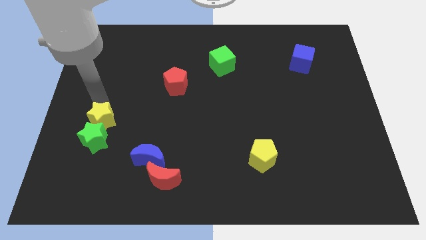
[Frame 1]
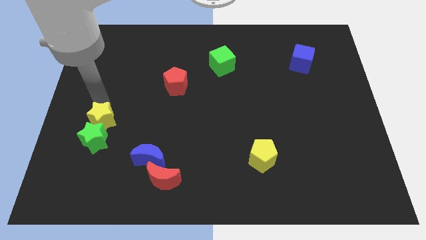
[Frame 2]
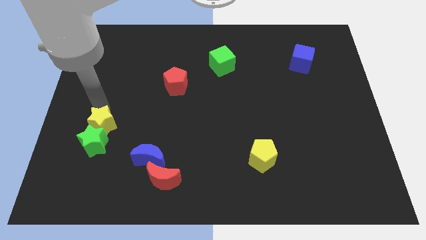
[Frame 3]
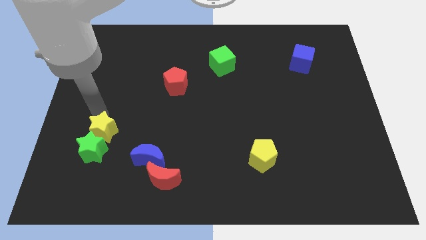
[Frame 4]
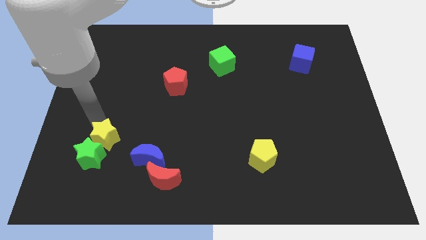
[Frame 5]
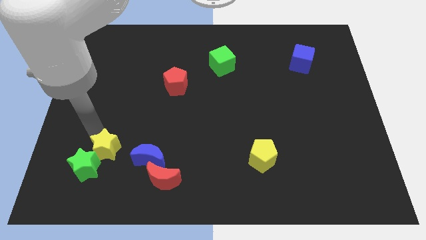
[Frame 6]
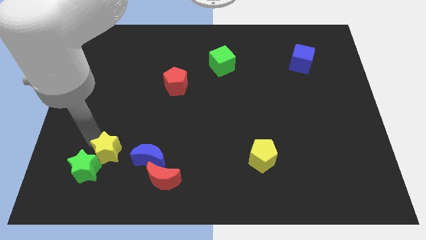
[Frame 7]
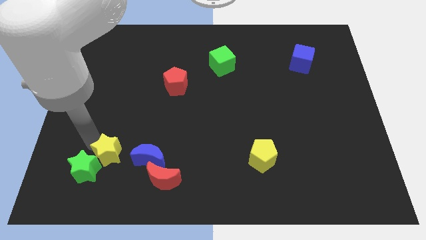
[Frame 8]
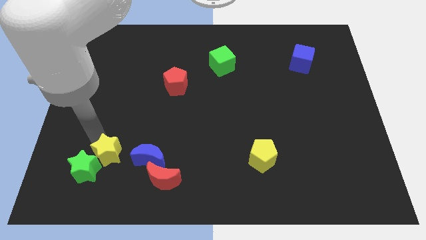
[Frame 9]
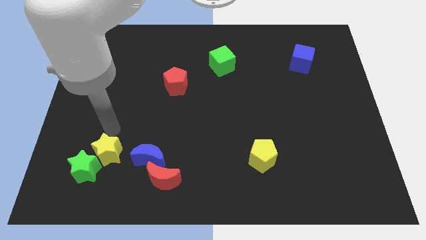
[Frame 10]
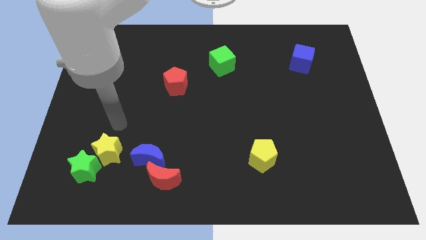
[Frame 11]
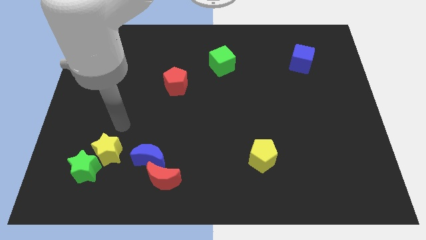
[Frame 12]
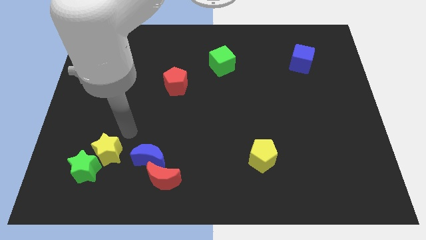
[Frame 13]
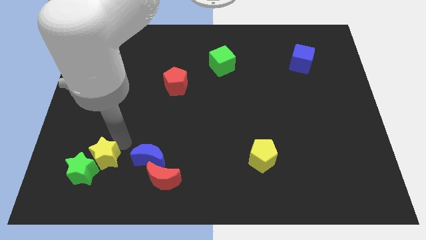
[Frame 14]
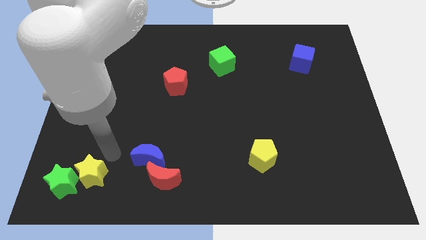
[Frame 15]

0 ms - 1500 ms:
move the yellow and green stars towards the bottom left corner

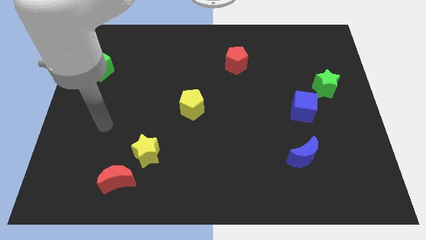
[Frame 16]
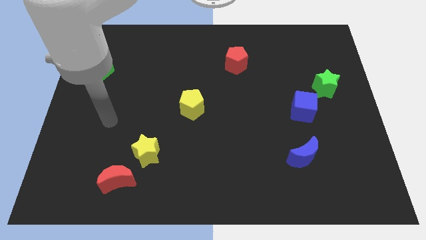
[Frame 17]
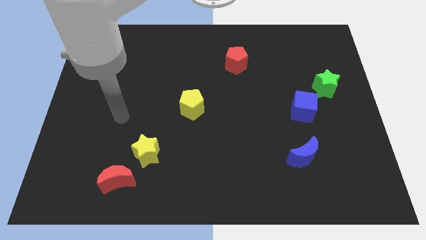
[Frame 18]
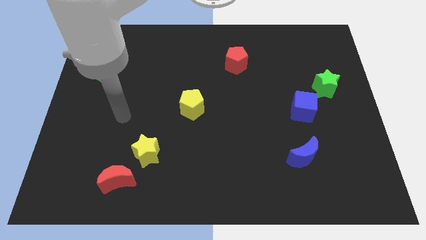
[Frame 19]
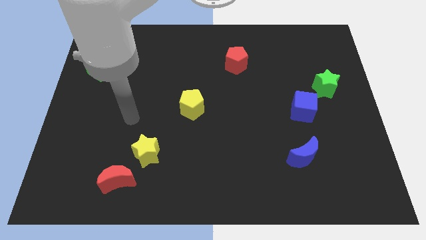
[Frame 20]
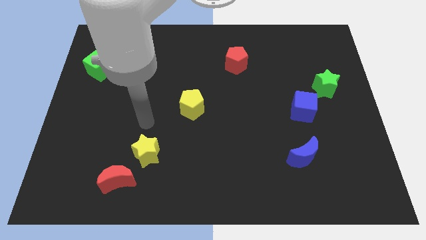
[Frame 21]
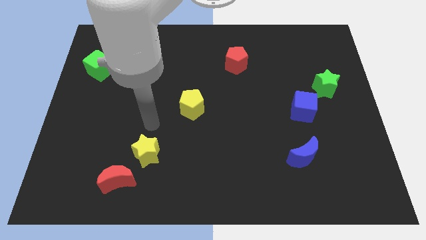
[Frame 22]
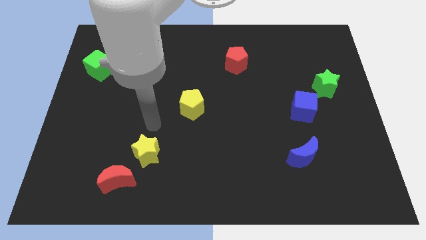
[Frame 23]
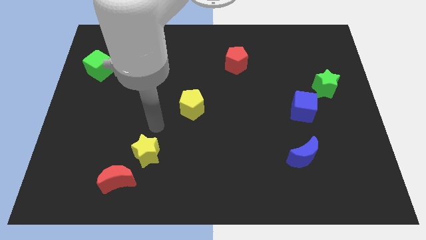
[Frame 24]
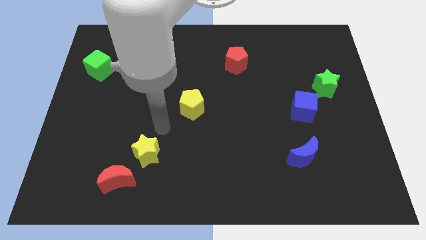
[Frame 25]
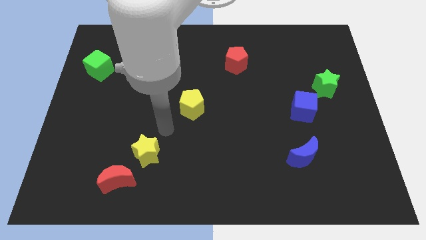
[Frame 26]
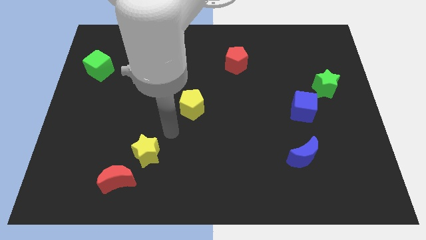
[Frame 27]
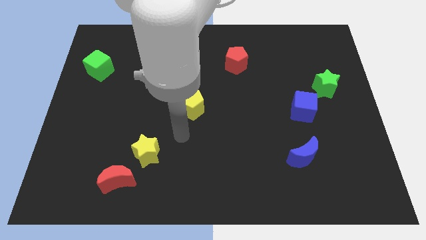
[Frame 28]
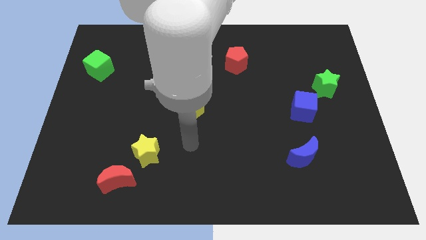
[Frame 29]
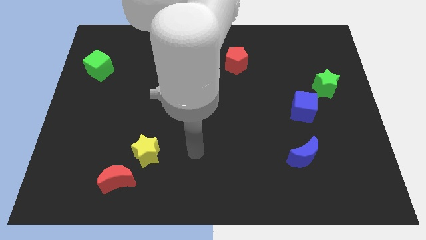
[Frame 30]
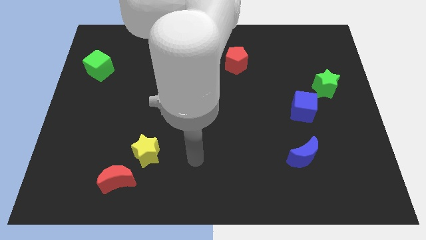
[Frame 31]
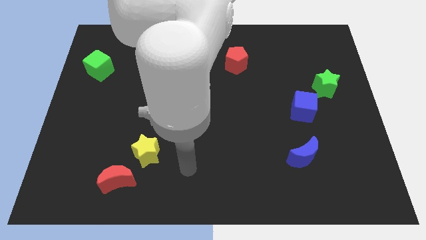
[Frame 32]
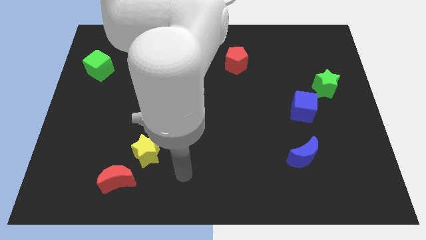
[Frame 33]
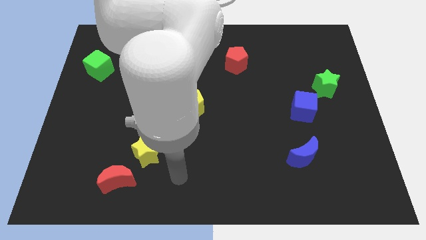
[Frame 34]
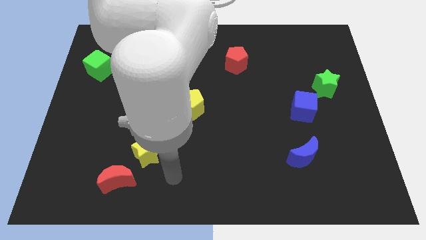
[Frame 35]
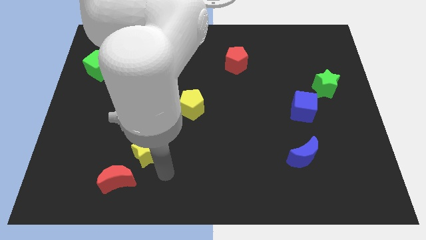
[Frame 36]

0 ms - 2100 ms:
move your arm around towards the yellow star

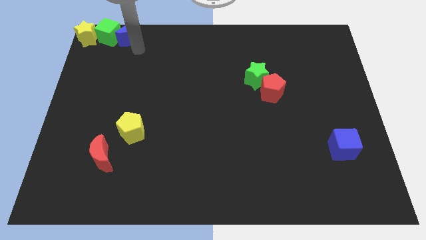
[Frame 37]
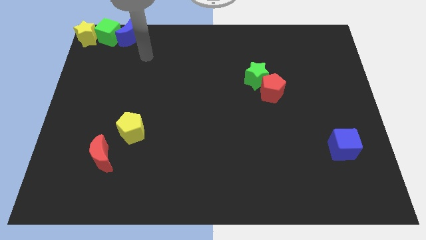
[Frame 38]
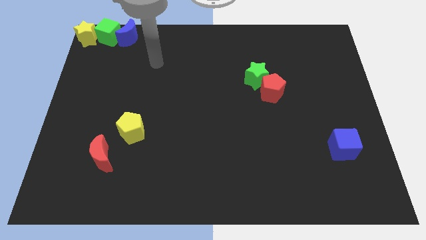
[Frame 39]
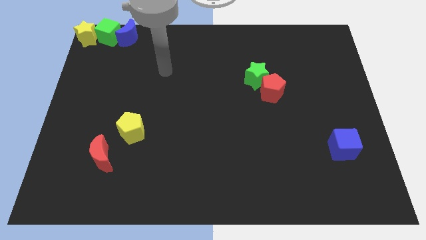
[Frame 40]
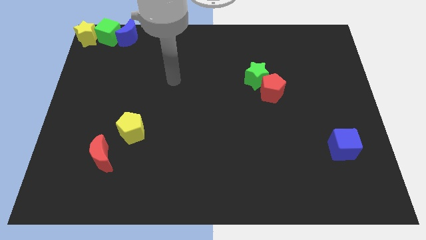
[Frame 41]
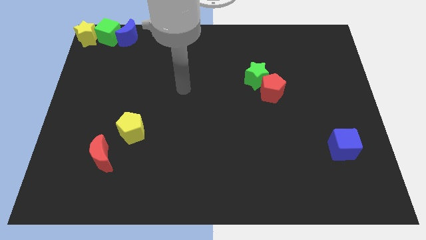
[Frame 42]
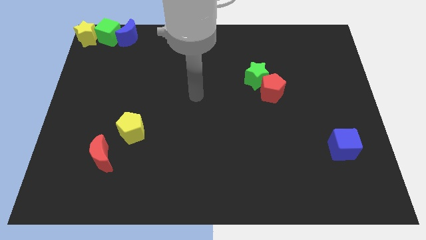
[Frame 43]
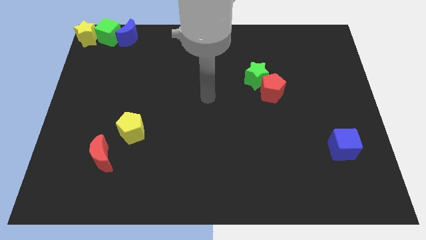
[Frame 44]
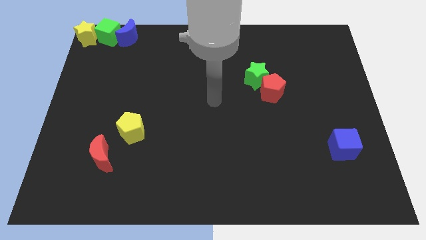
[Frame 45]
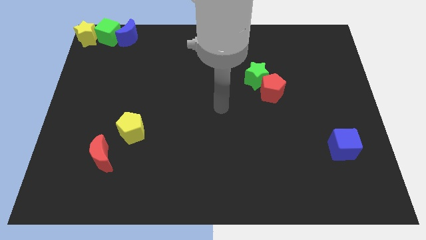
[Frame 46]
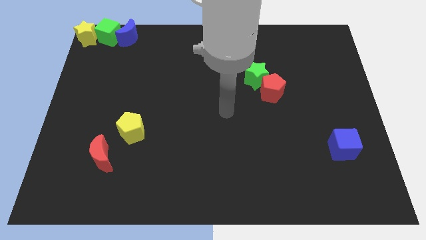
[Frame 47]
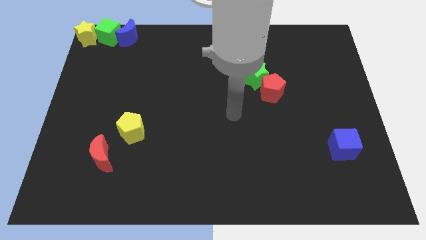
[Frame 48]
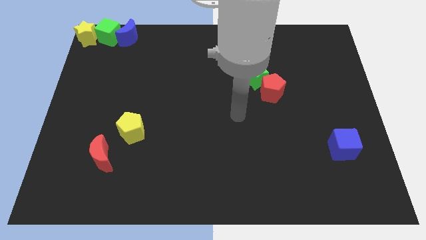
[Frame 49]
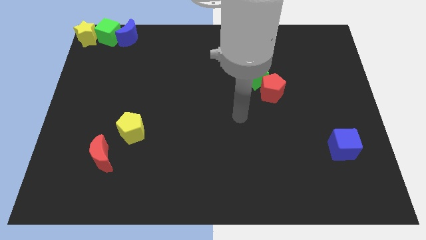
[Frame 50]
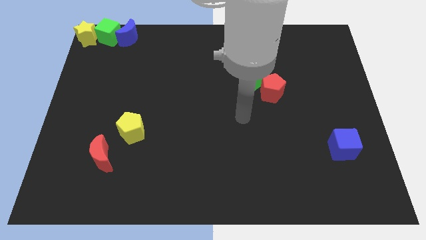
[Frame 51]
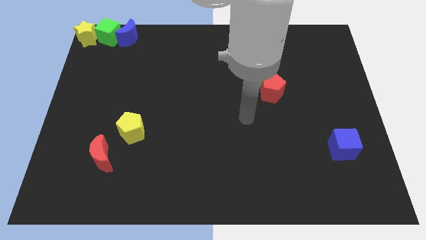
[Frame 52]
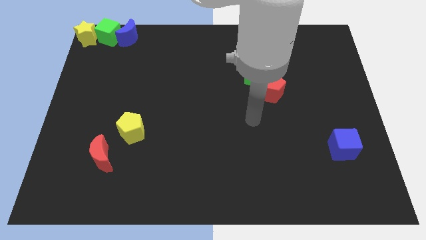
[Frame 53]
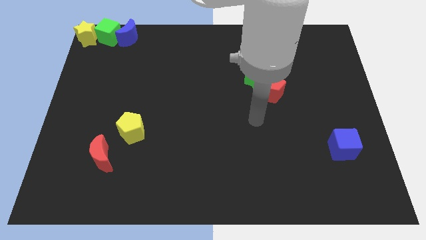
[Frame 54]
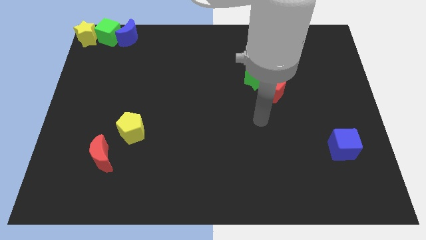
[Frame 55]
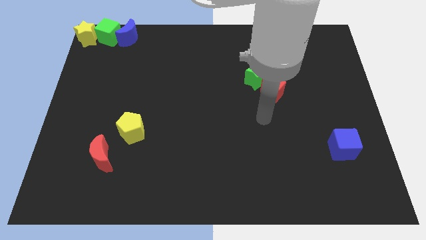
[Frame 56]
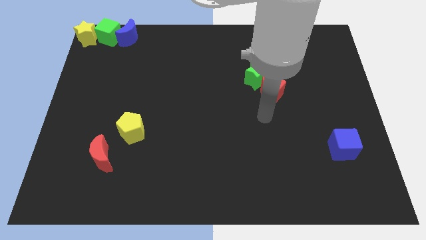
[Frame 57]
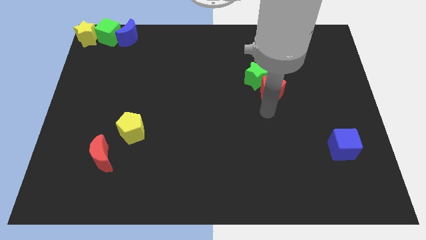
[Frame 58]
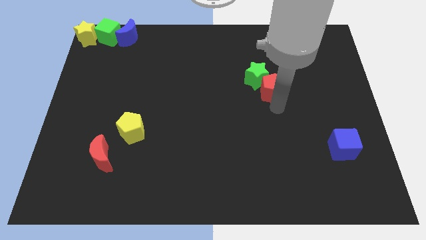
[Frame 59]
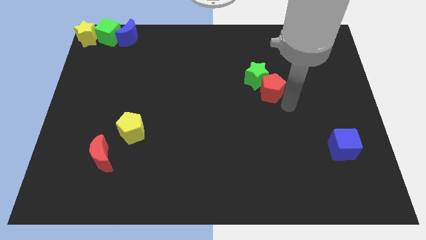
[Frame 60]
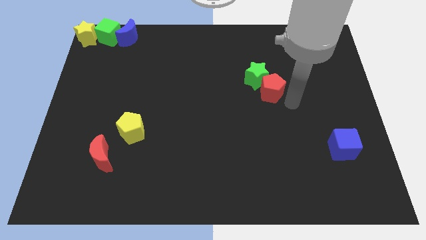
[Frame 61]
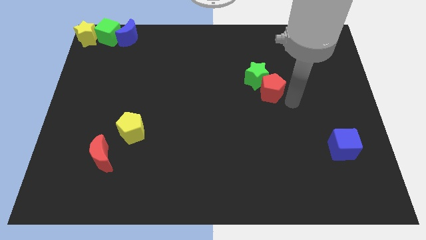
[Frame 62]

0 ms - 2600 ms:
move the arm near the red pentagon

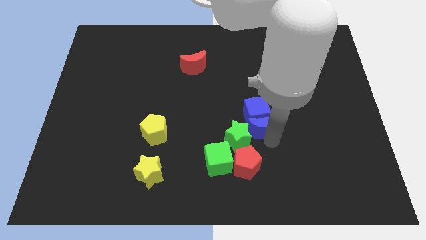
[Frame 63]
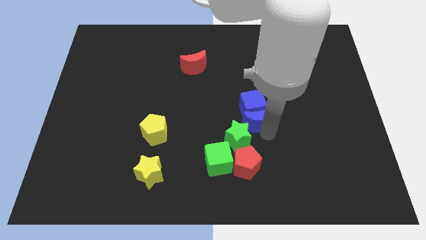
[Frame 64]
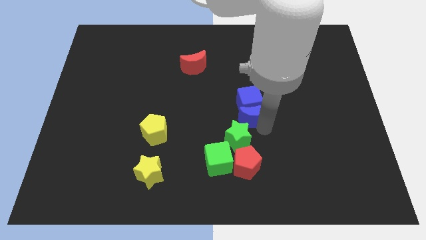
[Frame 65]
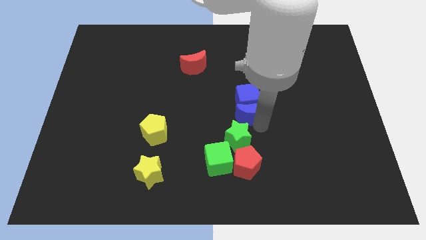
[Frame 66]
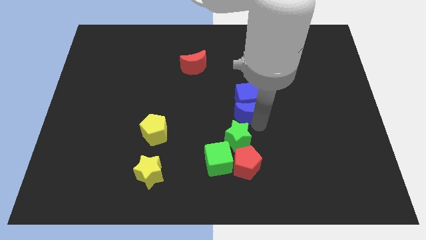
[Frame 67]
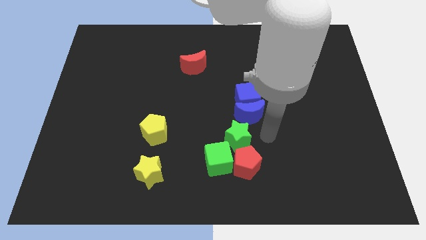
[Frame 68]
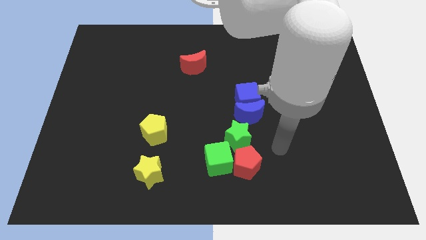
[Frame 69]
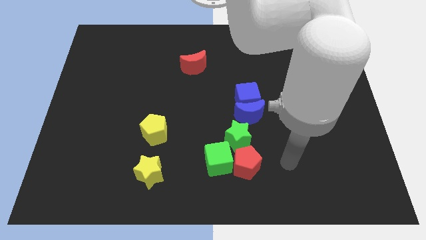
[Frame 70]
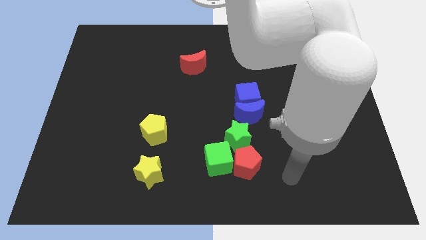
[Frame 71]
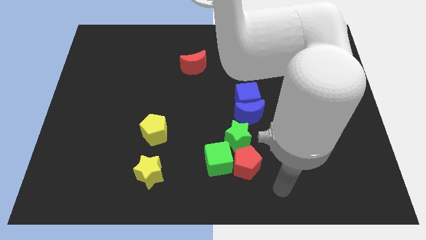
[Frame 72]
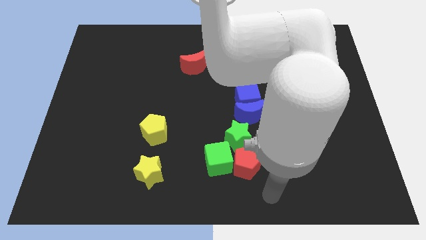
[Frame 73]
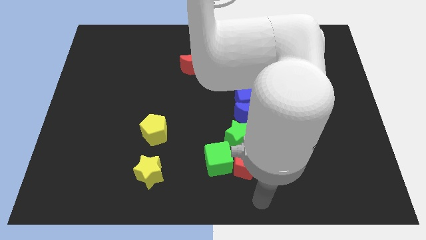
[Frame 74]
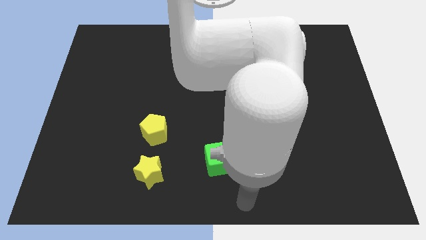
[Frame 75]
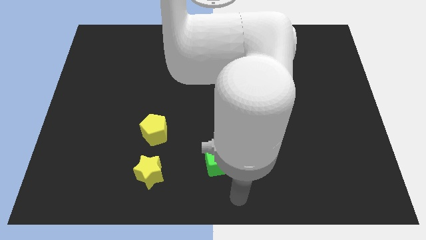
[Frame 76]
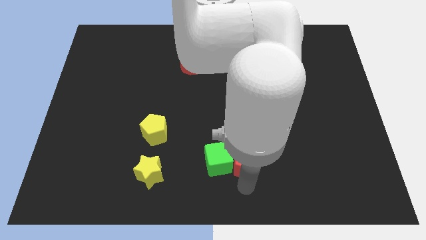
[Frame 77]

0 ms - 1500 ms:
place the arm below the red pentagon

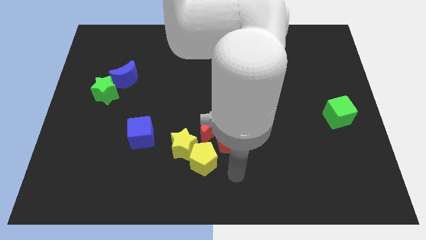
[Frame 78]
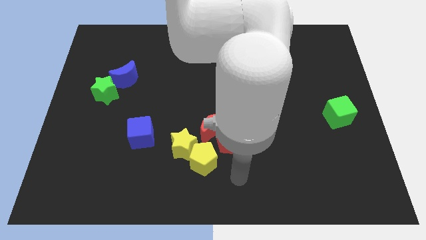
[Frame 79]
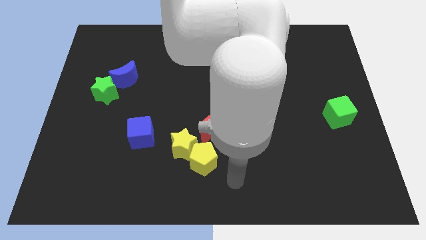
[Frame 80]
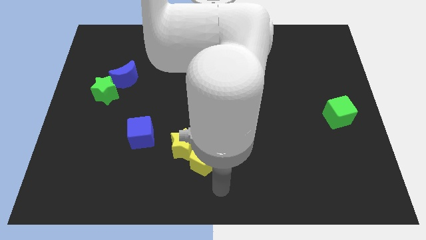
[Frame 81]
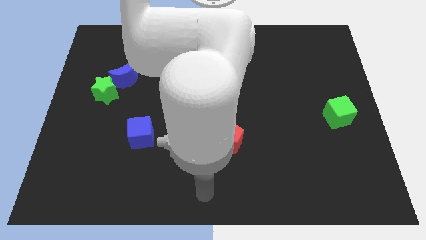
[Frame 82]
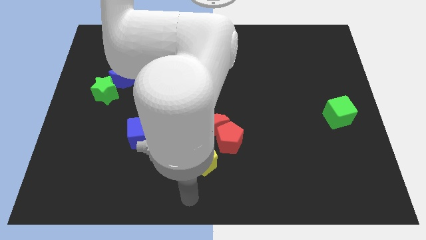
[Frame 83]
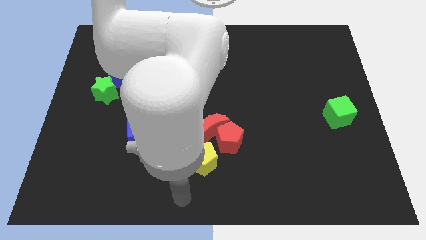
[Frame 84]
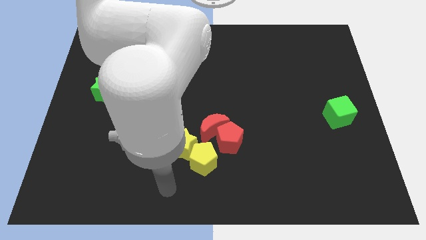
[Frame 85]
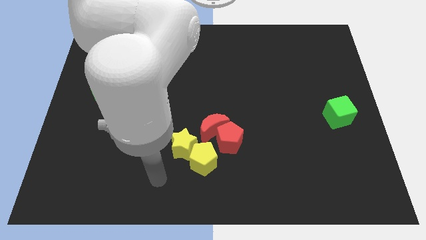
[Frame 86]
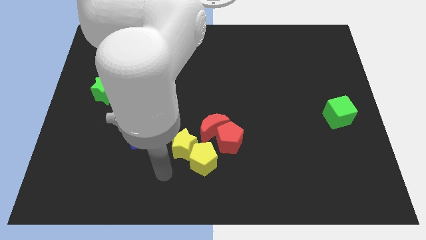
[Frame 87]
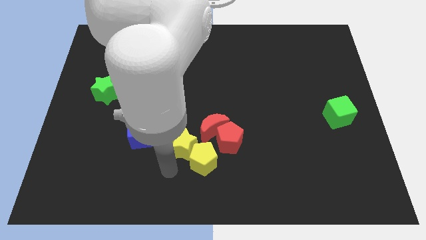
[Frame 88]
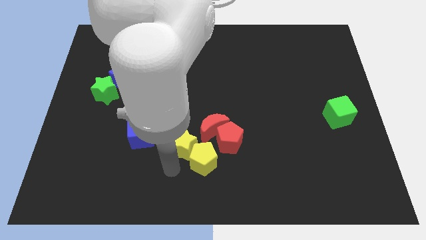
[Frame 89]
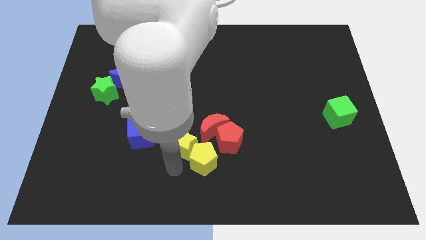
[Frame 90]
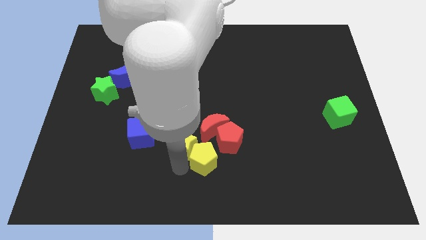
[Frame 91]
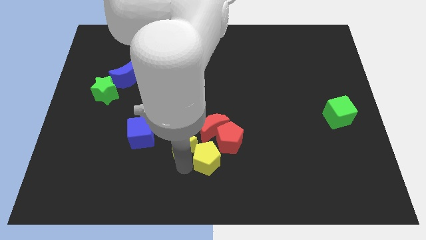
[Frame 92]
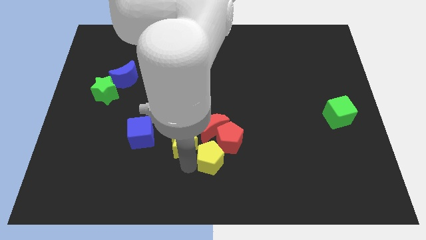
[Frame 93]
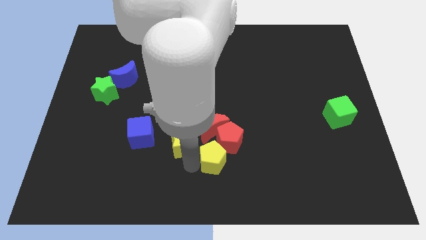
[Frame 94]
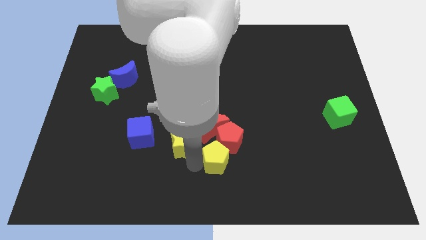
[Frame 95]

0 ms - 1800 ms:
push the yellow pentagon near the red pentagon
